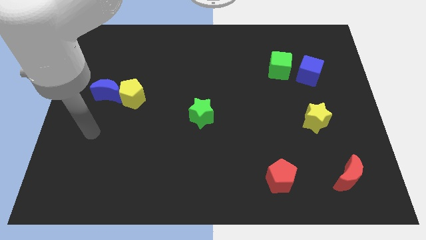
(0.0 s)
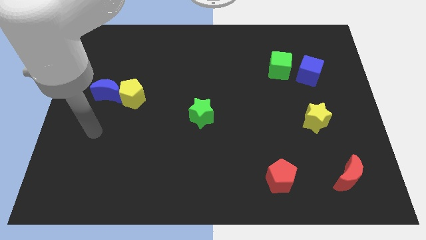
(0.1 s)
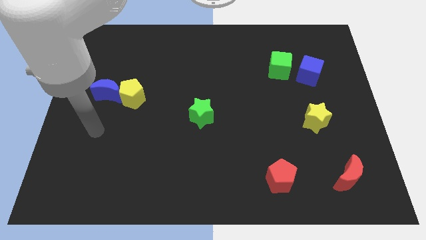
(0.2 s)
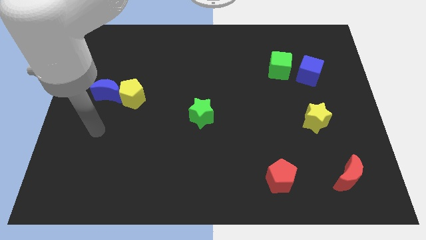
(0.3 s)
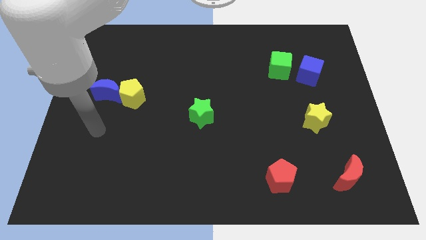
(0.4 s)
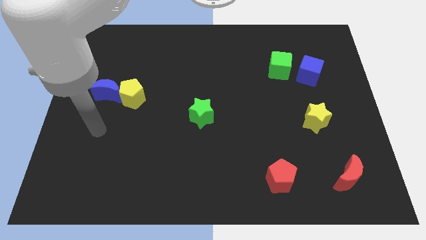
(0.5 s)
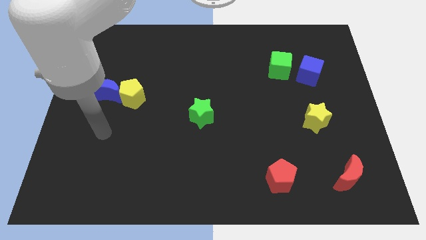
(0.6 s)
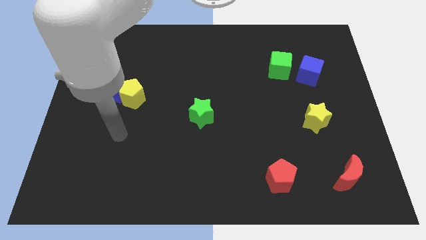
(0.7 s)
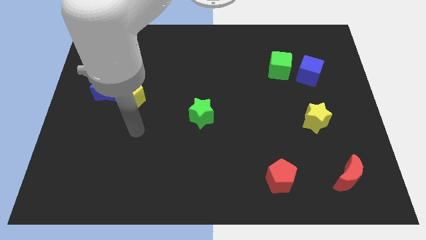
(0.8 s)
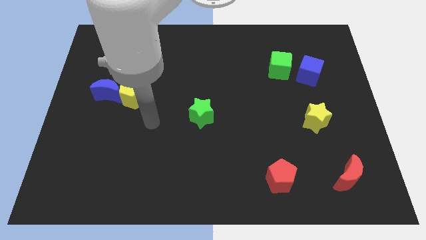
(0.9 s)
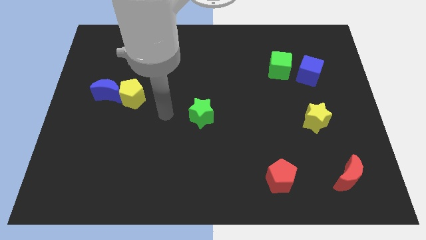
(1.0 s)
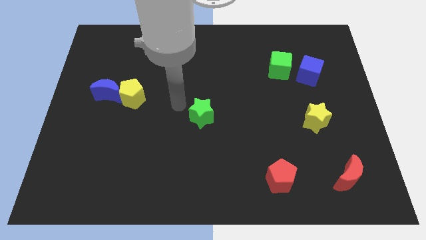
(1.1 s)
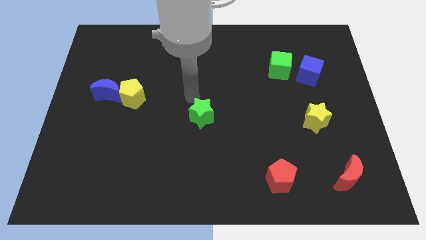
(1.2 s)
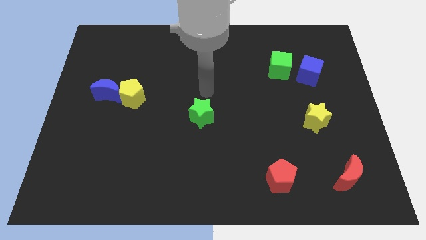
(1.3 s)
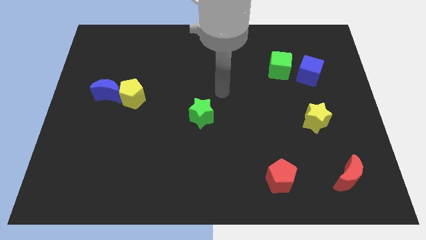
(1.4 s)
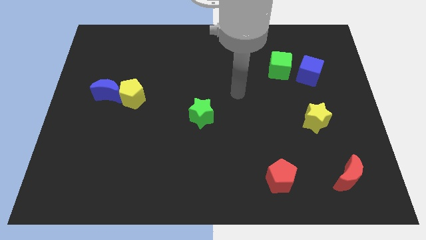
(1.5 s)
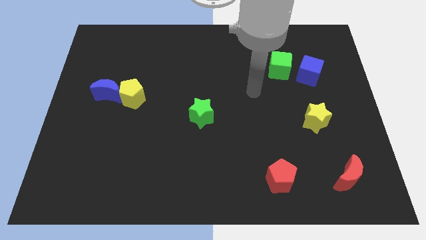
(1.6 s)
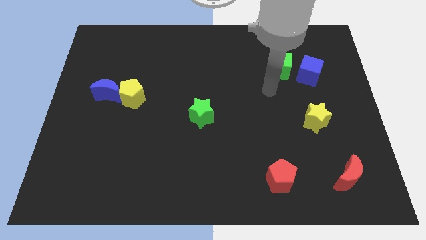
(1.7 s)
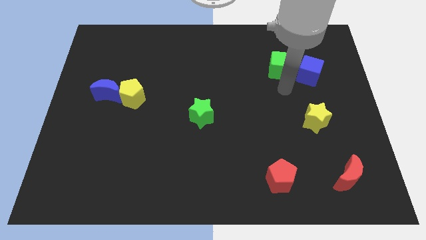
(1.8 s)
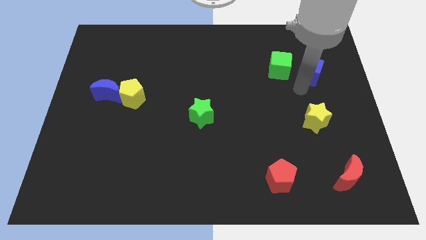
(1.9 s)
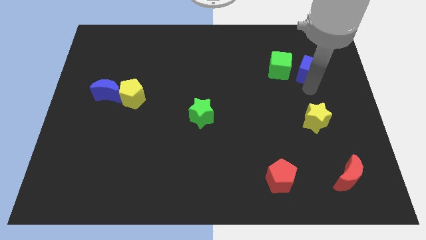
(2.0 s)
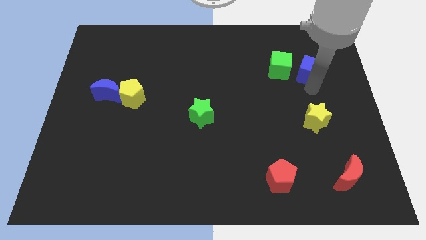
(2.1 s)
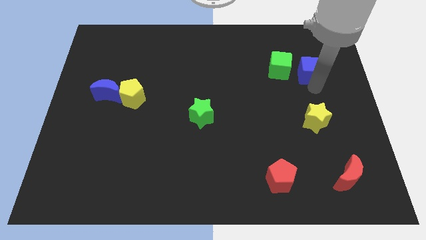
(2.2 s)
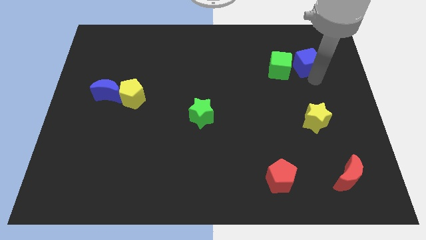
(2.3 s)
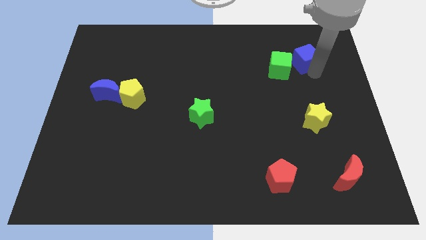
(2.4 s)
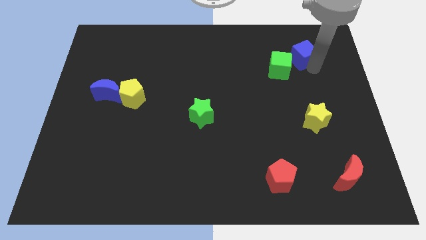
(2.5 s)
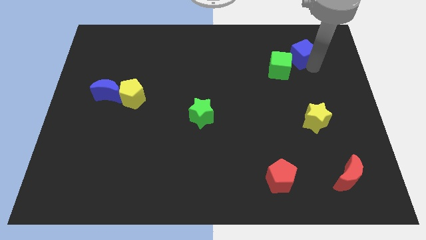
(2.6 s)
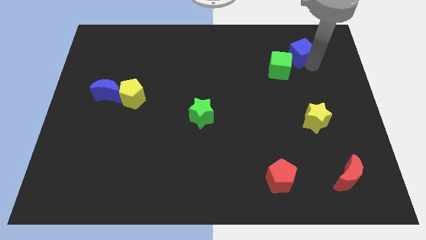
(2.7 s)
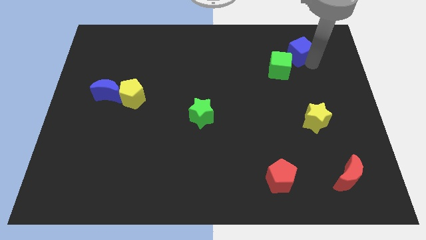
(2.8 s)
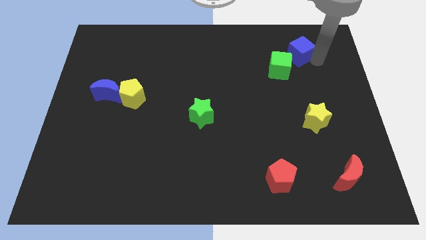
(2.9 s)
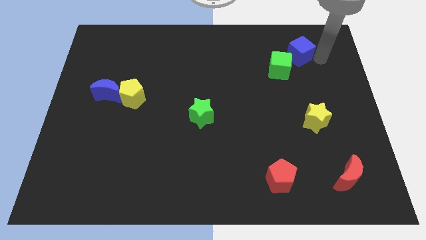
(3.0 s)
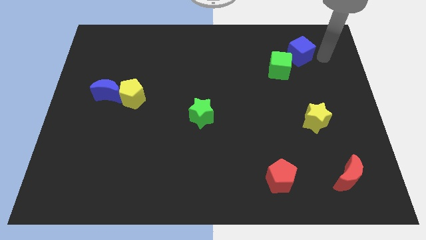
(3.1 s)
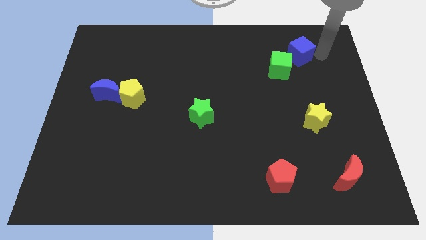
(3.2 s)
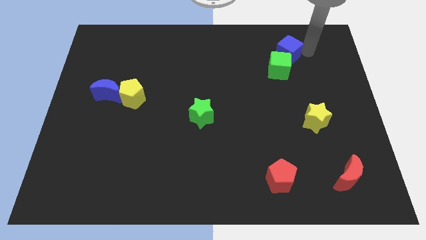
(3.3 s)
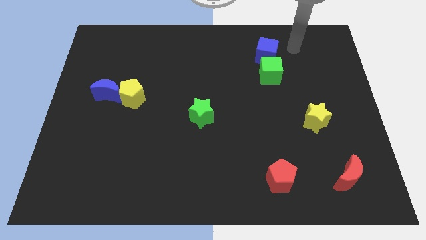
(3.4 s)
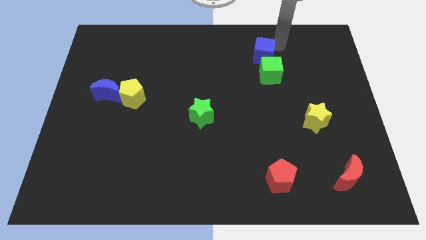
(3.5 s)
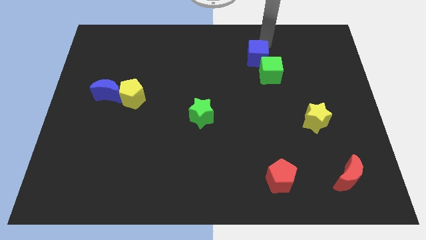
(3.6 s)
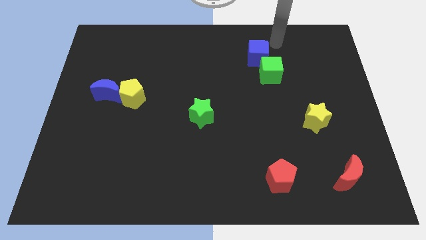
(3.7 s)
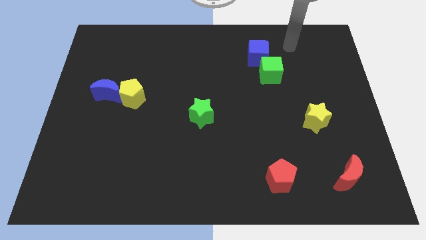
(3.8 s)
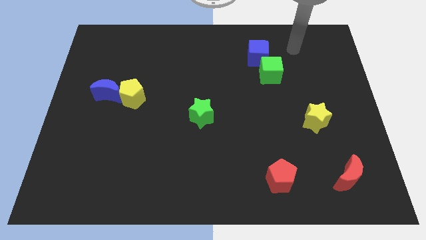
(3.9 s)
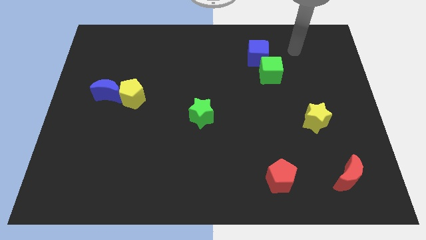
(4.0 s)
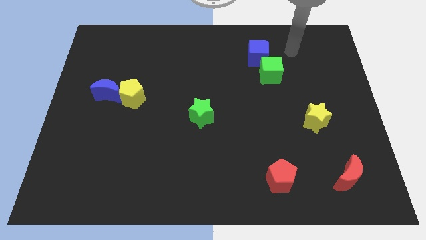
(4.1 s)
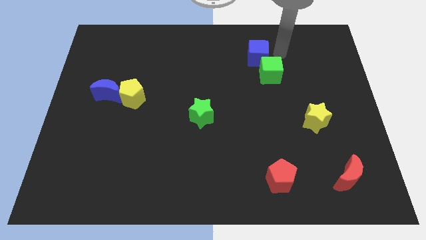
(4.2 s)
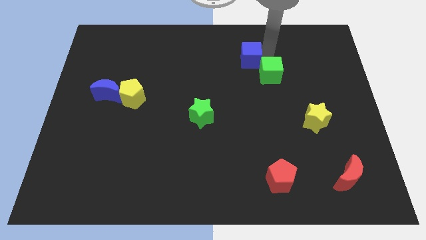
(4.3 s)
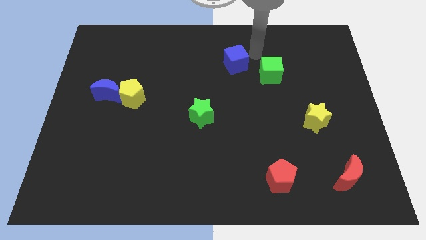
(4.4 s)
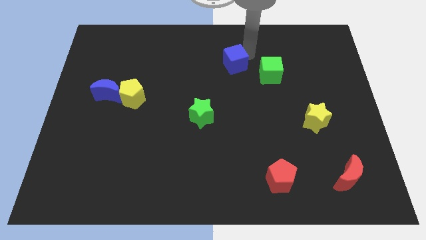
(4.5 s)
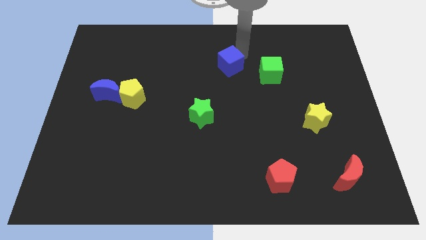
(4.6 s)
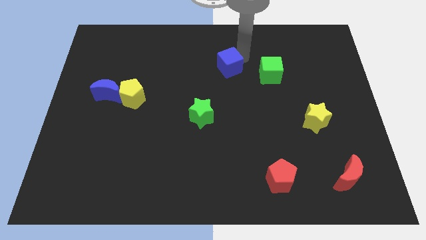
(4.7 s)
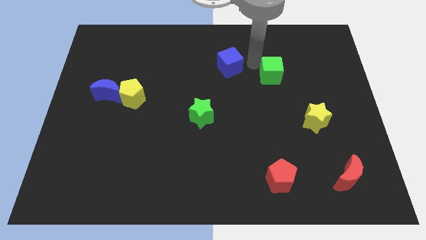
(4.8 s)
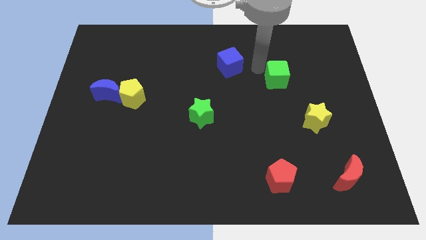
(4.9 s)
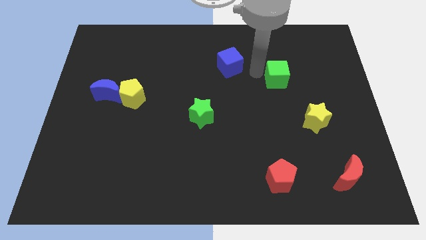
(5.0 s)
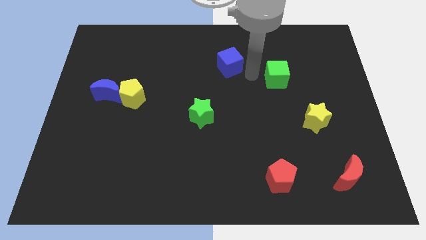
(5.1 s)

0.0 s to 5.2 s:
place blue cube on the left side of the green cube

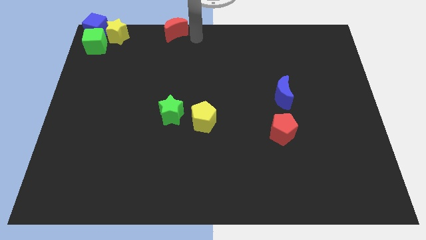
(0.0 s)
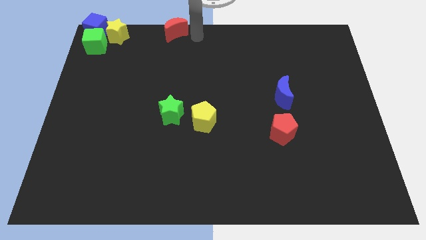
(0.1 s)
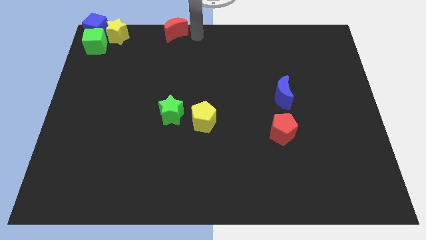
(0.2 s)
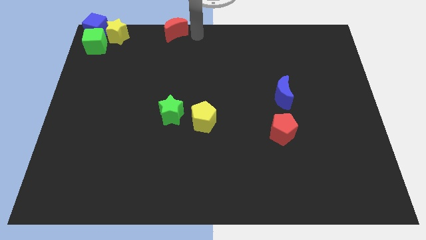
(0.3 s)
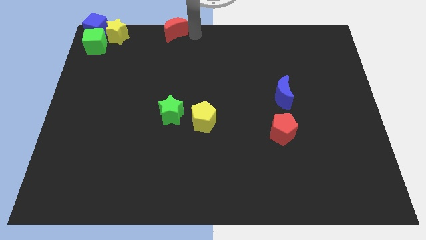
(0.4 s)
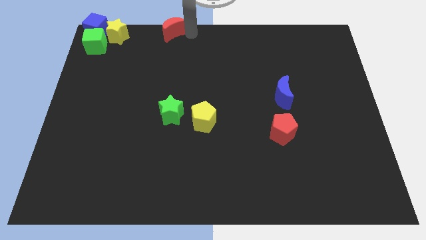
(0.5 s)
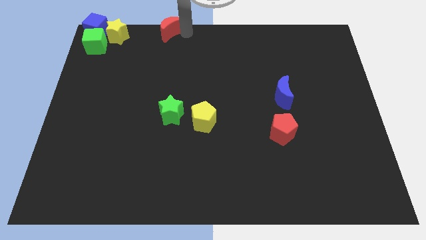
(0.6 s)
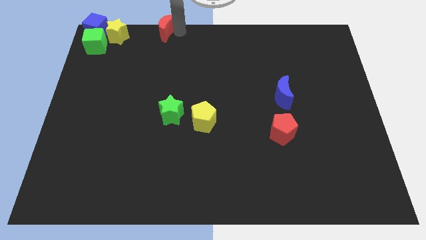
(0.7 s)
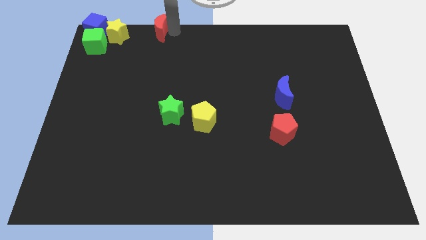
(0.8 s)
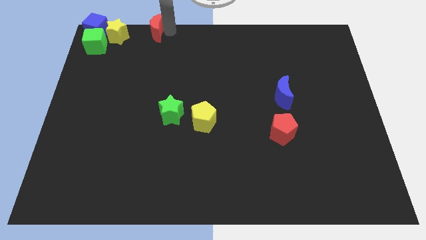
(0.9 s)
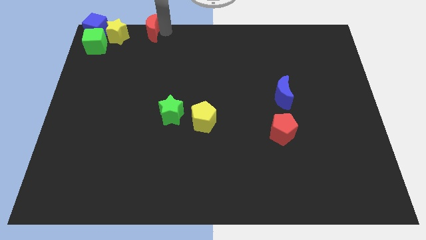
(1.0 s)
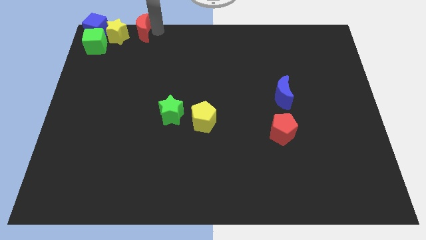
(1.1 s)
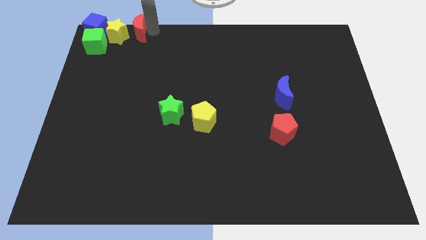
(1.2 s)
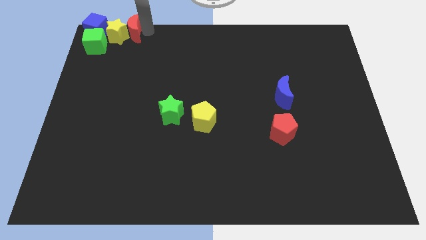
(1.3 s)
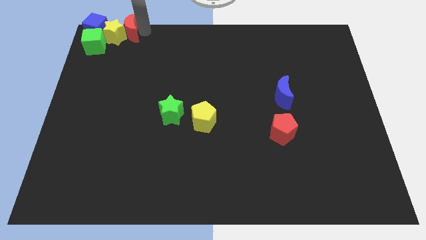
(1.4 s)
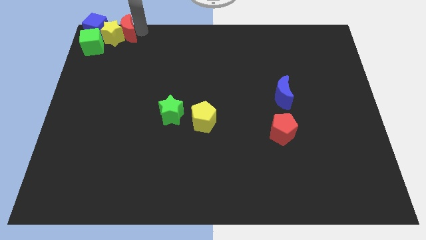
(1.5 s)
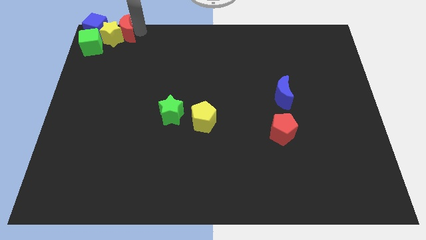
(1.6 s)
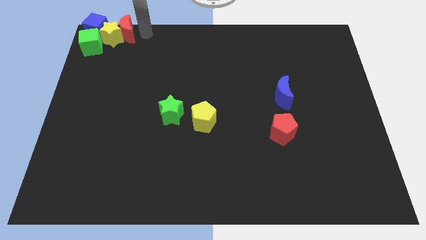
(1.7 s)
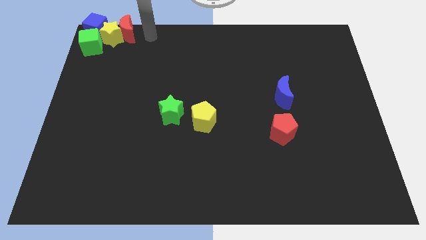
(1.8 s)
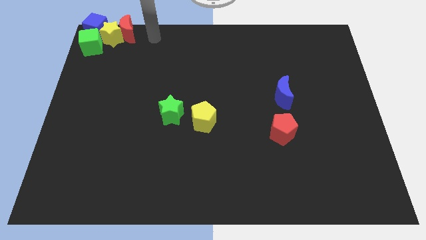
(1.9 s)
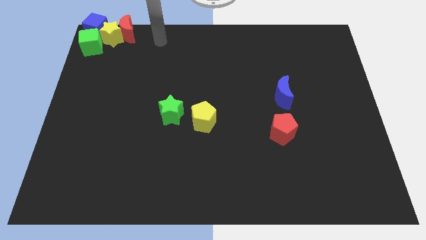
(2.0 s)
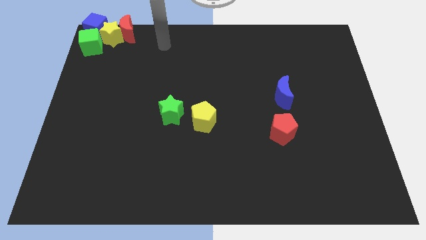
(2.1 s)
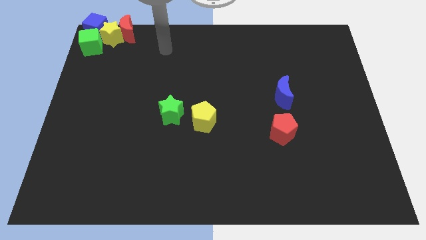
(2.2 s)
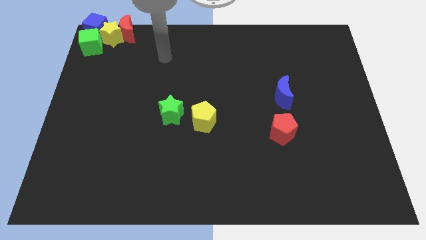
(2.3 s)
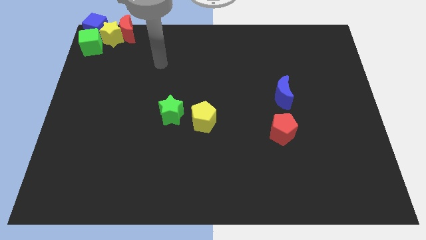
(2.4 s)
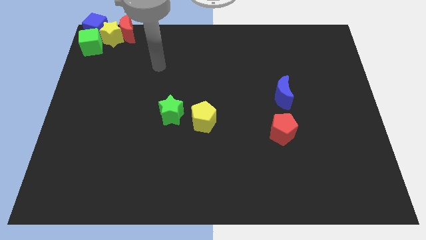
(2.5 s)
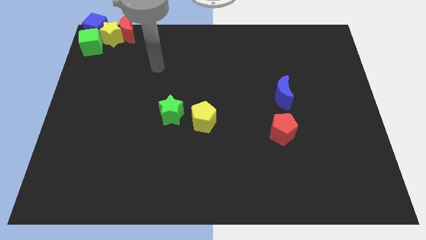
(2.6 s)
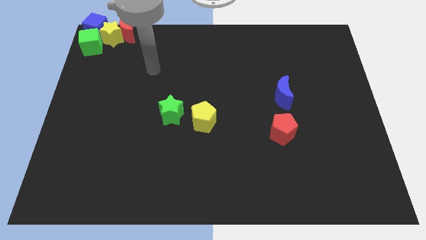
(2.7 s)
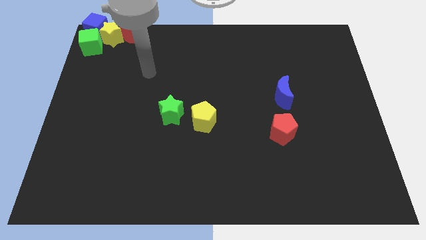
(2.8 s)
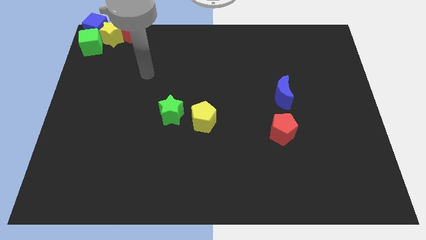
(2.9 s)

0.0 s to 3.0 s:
place the red moon in to yellow star

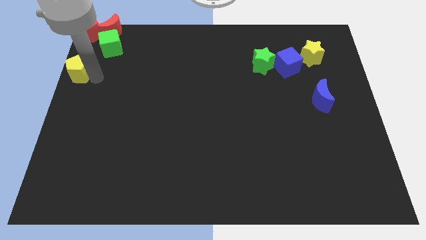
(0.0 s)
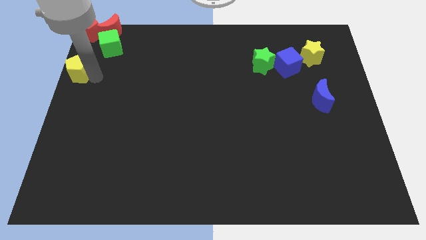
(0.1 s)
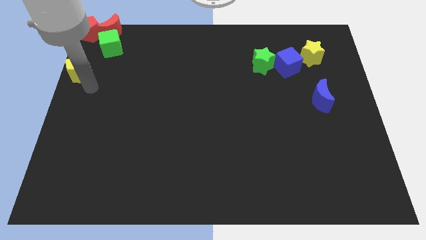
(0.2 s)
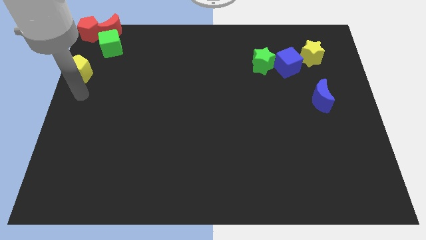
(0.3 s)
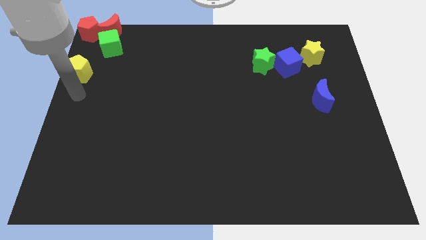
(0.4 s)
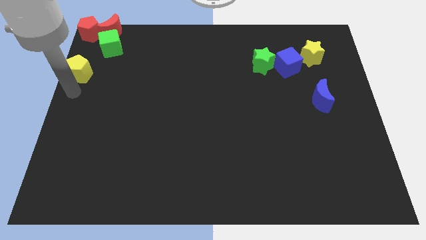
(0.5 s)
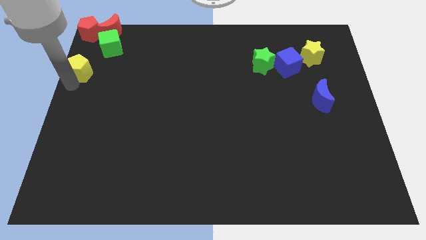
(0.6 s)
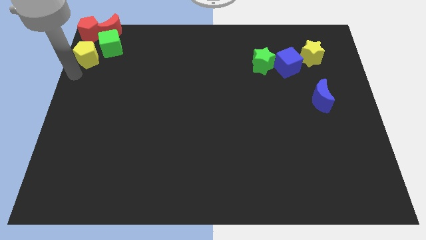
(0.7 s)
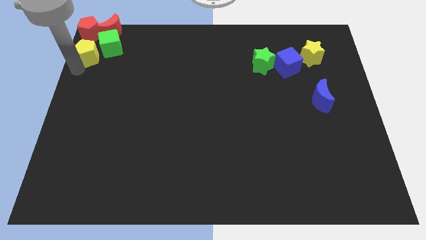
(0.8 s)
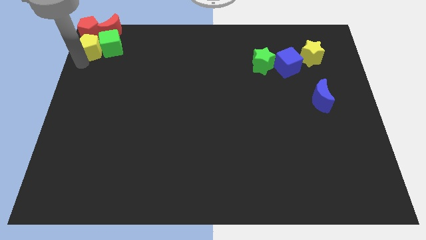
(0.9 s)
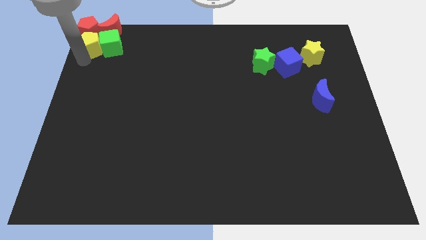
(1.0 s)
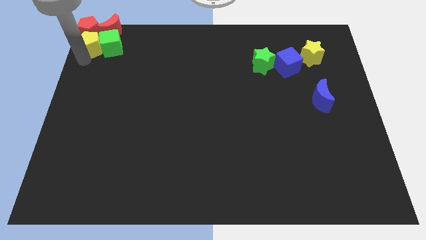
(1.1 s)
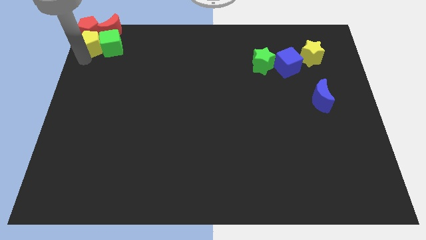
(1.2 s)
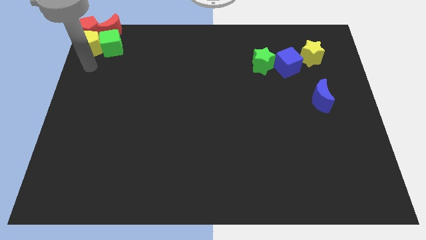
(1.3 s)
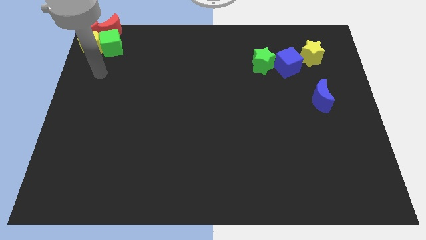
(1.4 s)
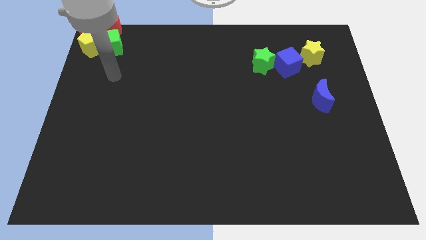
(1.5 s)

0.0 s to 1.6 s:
move yellow pentagon into red pentagon
